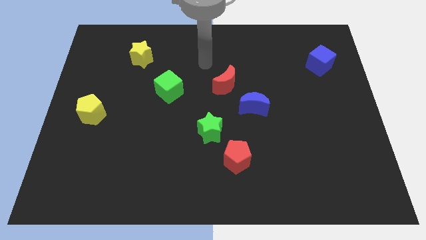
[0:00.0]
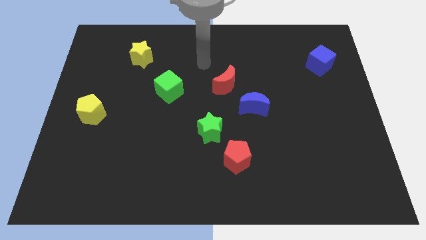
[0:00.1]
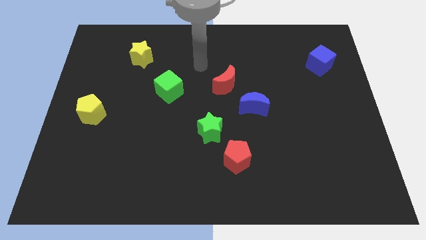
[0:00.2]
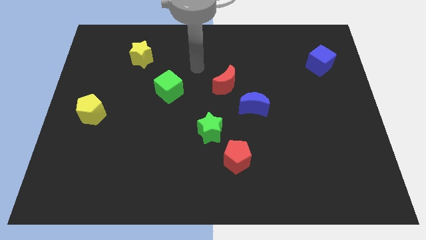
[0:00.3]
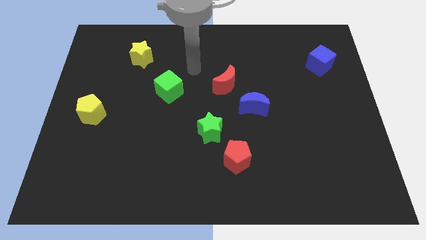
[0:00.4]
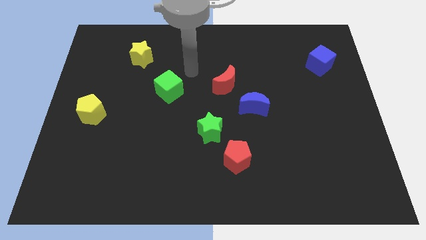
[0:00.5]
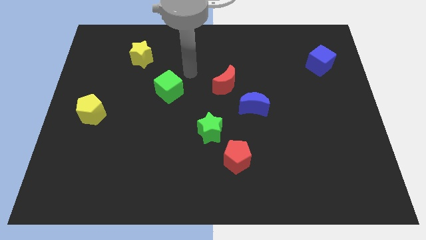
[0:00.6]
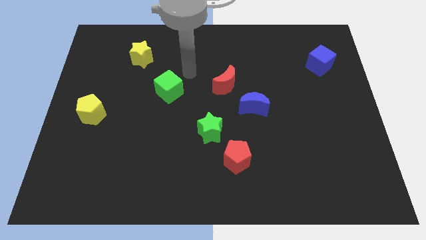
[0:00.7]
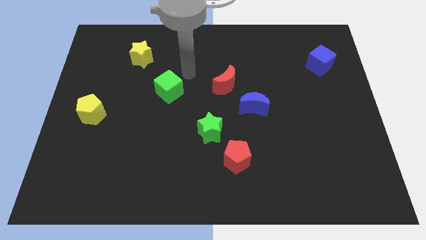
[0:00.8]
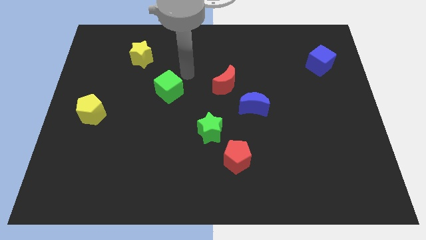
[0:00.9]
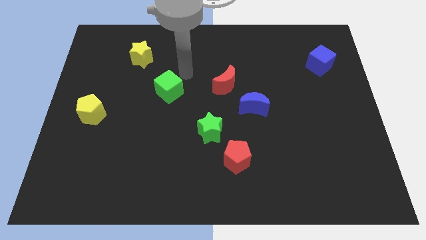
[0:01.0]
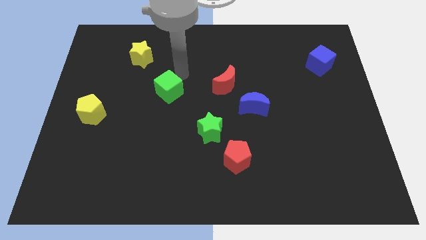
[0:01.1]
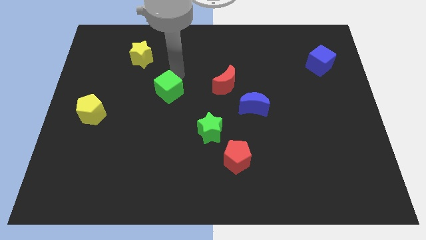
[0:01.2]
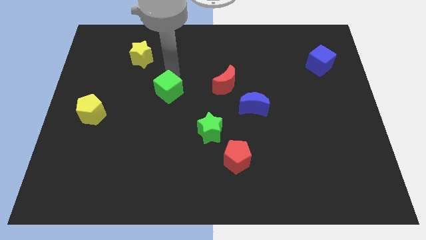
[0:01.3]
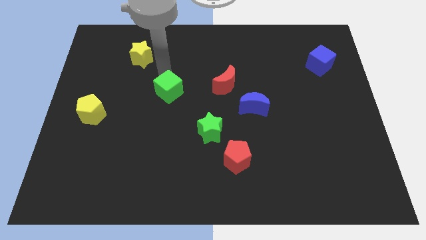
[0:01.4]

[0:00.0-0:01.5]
move your arm to the top of green cube

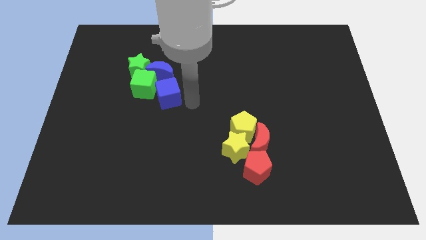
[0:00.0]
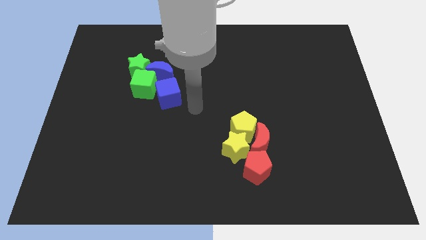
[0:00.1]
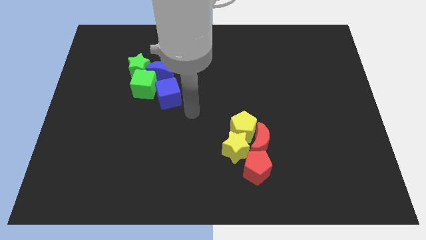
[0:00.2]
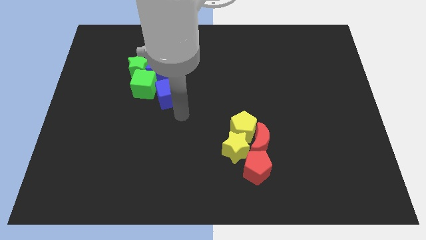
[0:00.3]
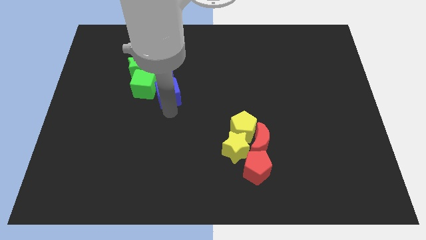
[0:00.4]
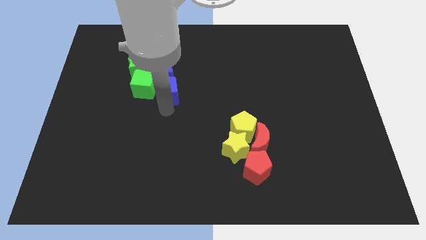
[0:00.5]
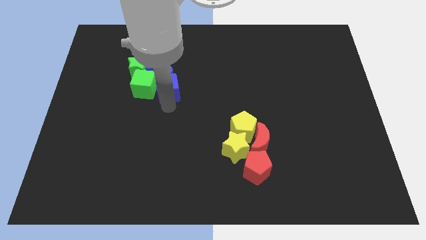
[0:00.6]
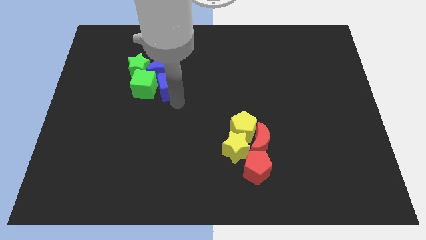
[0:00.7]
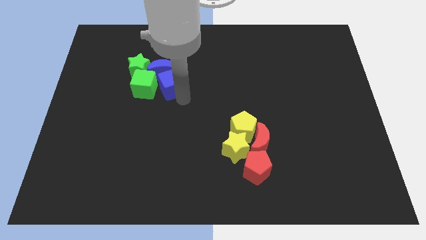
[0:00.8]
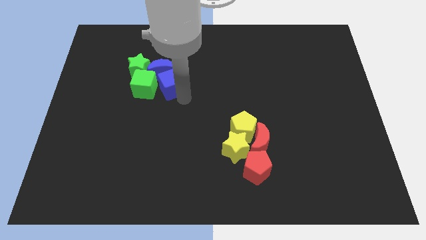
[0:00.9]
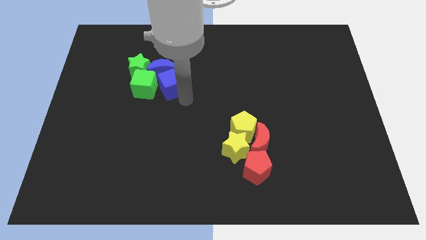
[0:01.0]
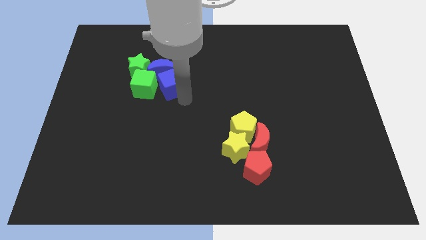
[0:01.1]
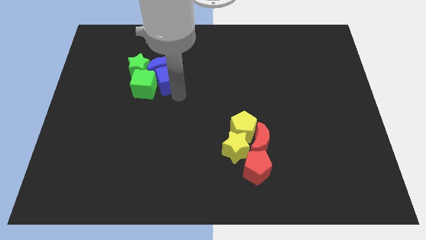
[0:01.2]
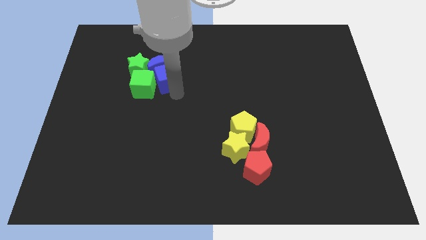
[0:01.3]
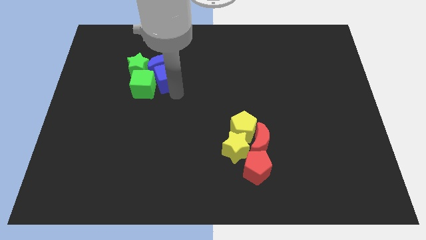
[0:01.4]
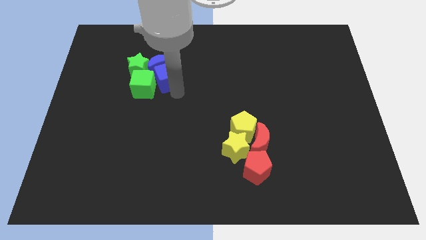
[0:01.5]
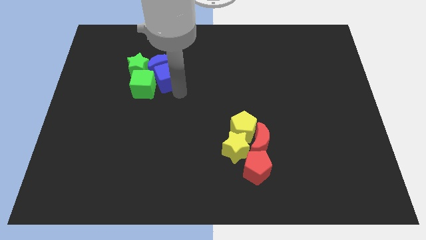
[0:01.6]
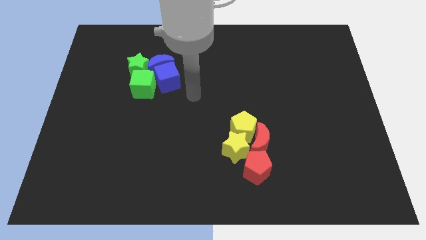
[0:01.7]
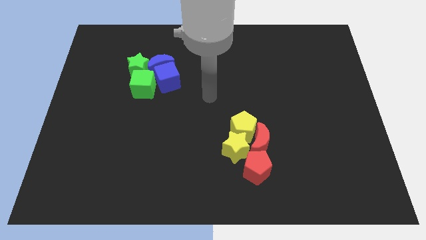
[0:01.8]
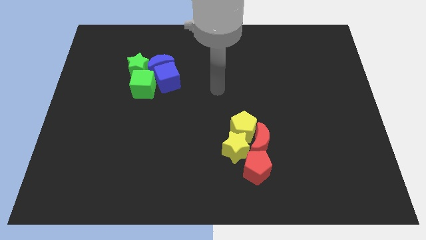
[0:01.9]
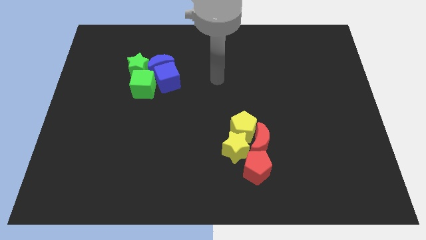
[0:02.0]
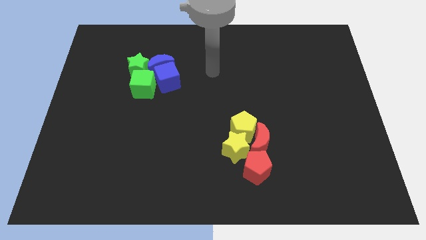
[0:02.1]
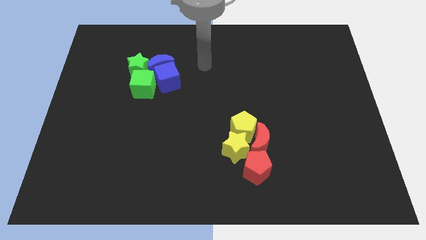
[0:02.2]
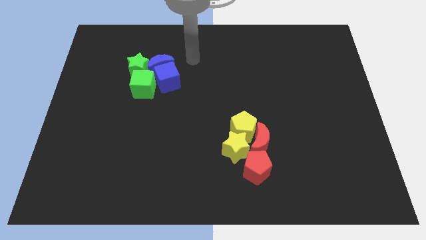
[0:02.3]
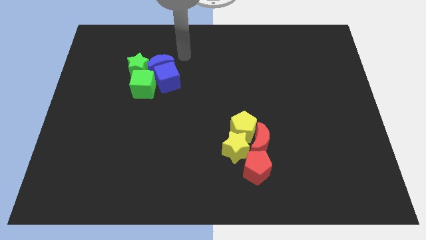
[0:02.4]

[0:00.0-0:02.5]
move the blue cube into the blue moon

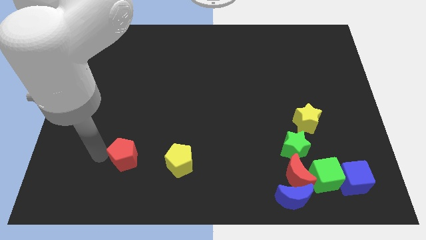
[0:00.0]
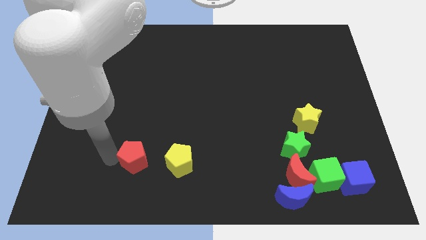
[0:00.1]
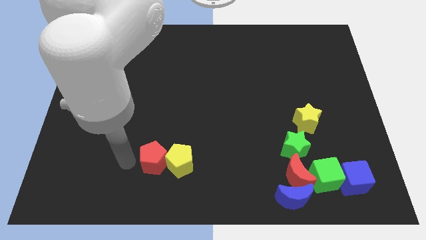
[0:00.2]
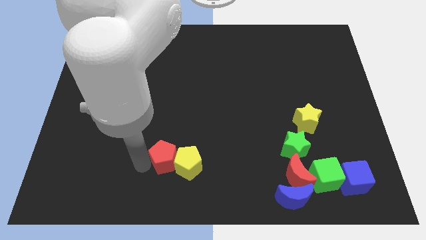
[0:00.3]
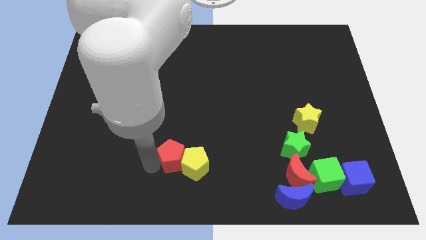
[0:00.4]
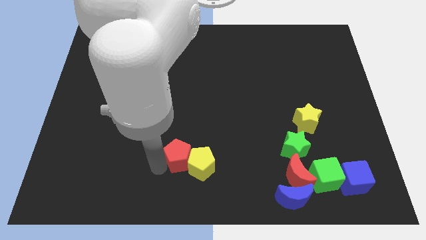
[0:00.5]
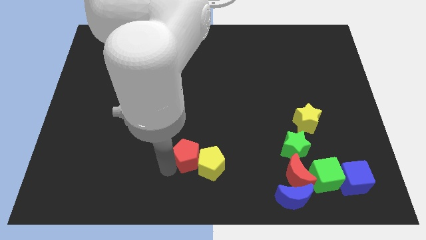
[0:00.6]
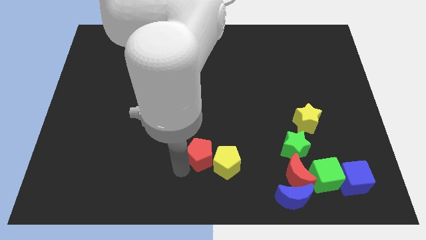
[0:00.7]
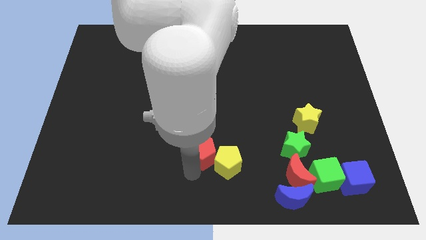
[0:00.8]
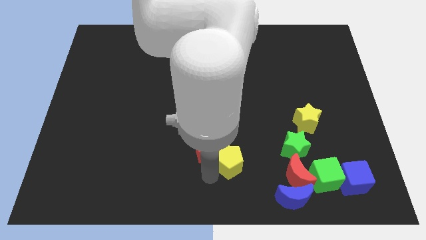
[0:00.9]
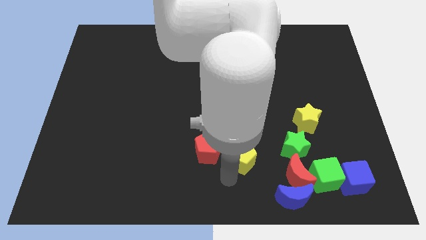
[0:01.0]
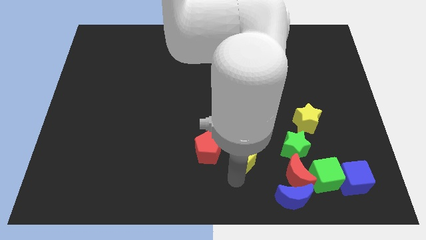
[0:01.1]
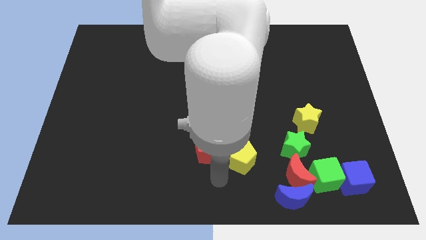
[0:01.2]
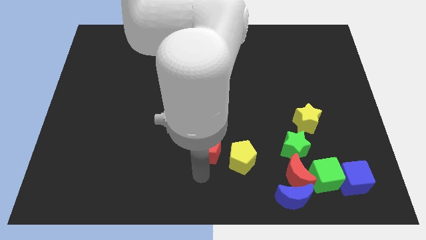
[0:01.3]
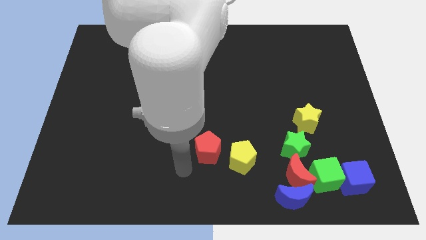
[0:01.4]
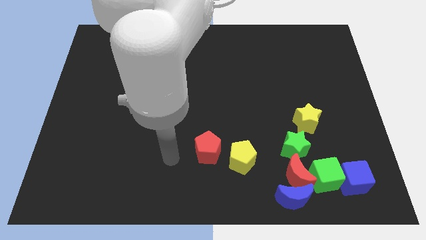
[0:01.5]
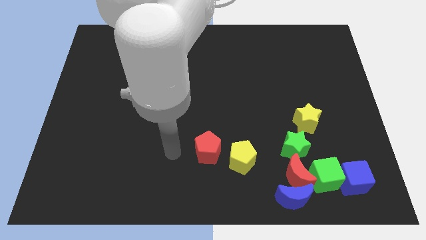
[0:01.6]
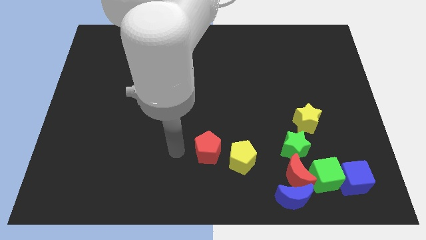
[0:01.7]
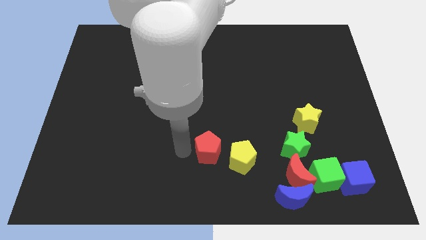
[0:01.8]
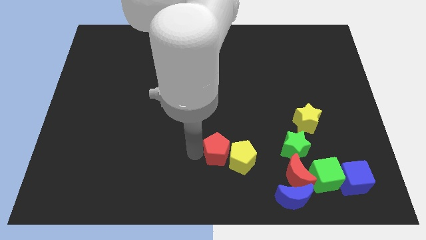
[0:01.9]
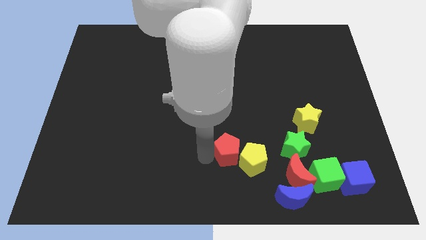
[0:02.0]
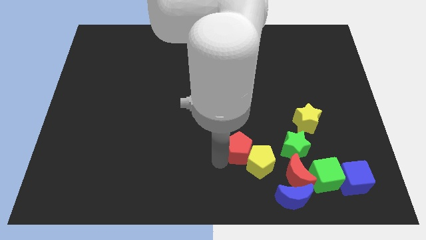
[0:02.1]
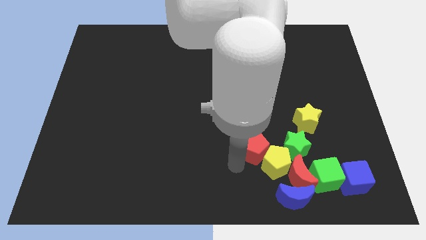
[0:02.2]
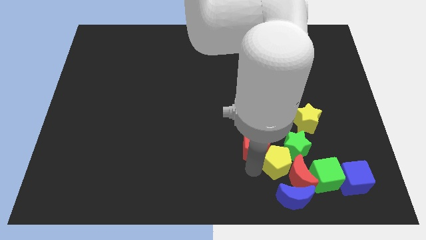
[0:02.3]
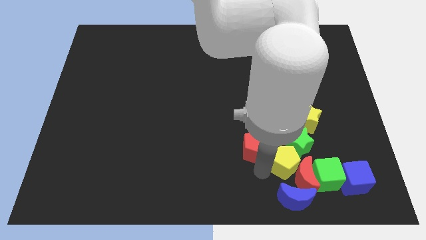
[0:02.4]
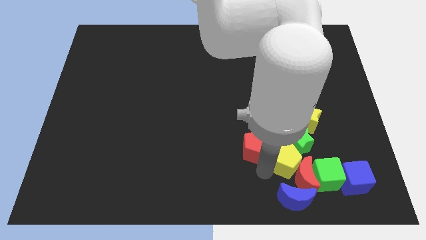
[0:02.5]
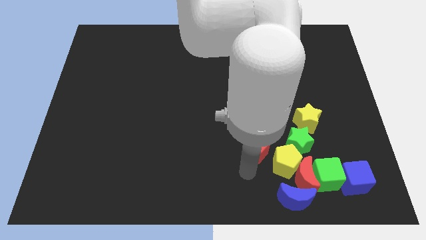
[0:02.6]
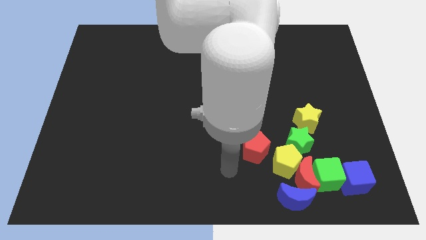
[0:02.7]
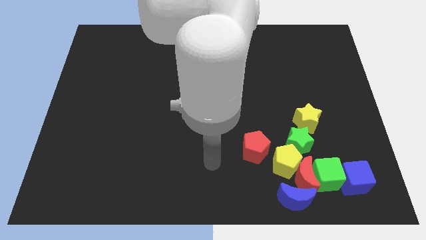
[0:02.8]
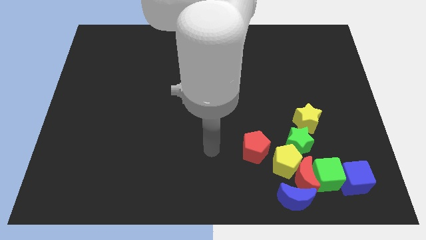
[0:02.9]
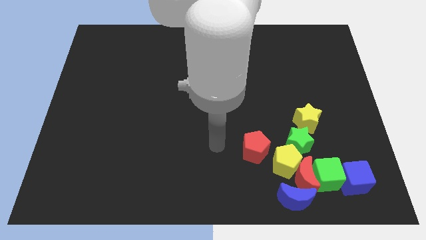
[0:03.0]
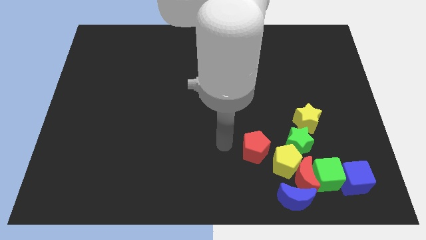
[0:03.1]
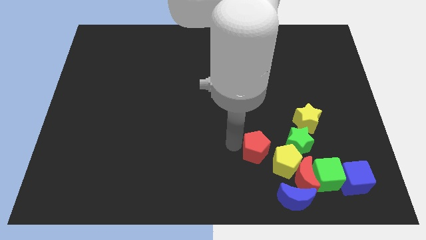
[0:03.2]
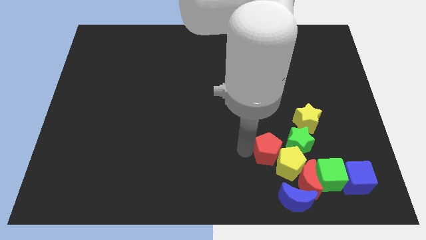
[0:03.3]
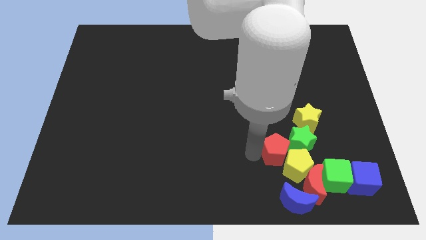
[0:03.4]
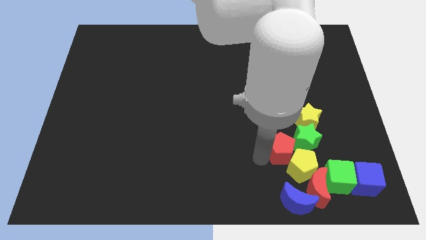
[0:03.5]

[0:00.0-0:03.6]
push the red pentagon and yellow pentagon in to the red crescent

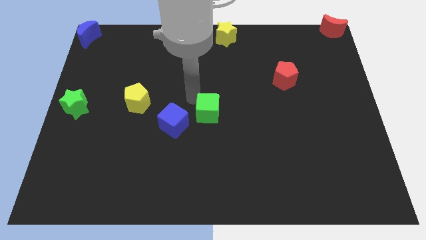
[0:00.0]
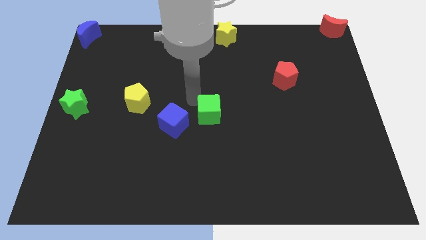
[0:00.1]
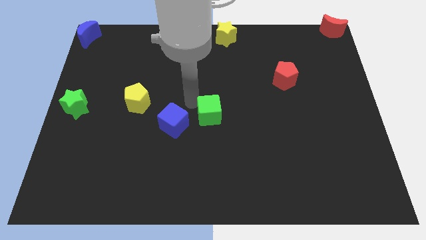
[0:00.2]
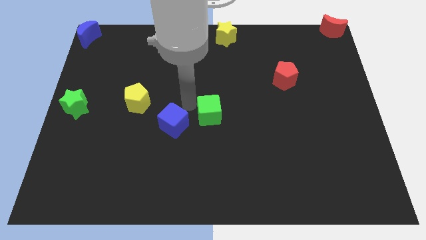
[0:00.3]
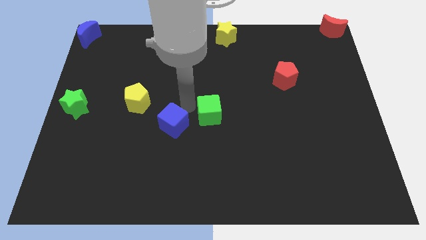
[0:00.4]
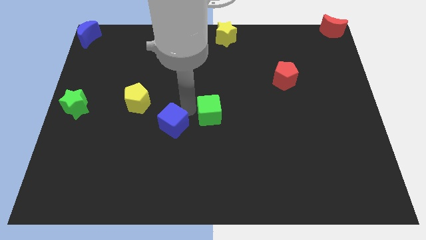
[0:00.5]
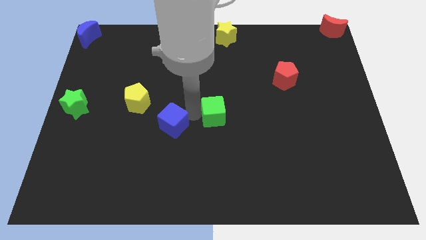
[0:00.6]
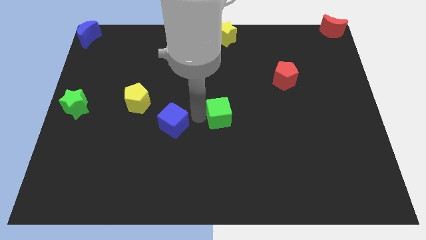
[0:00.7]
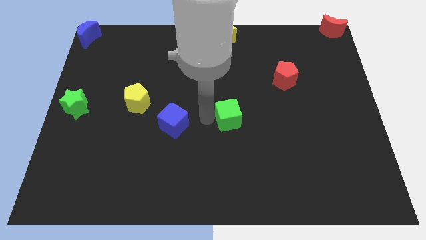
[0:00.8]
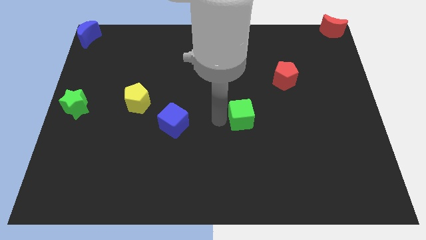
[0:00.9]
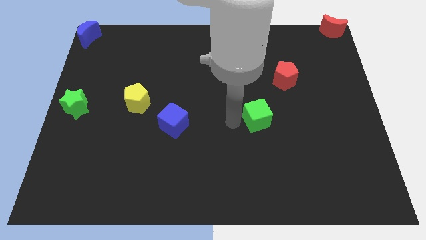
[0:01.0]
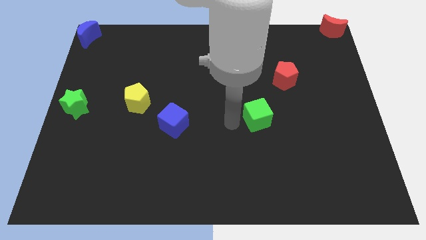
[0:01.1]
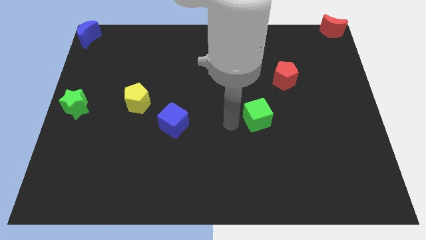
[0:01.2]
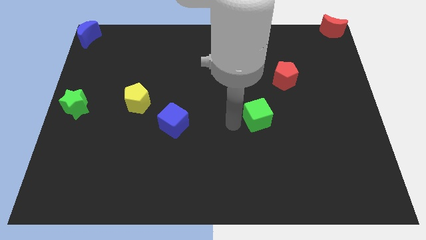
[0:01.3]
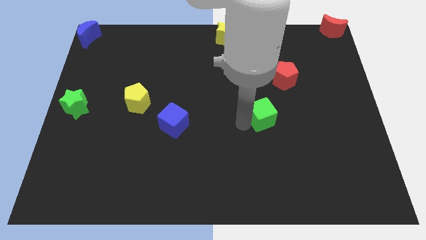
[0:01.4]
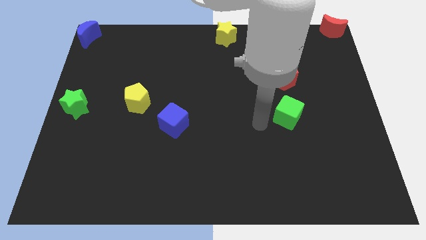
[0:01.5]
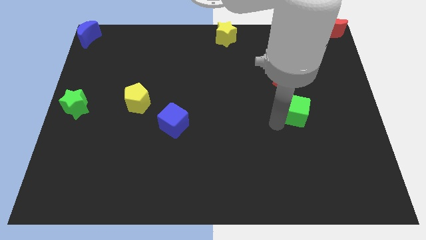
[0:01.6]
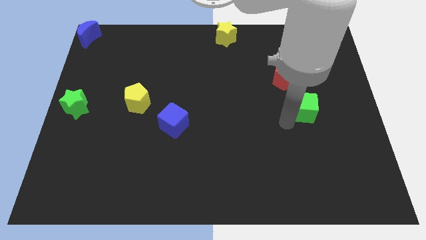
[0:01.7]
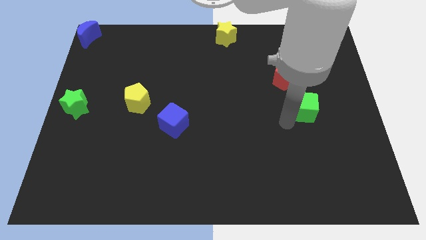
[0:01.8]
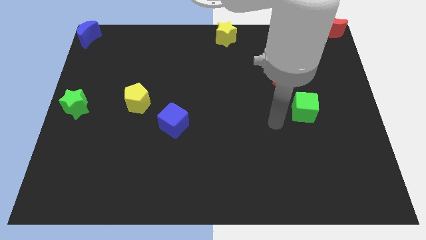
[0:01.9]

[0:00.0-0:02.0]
place the green cube vertically to the bottom of the red pentagon
